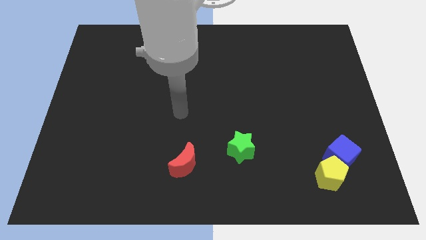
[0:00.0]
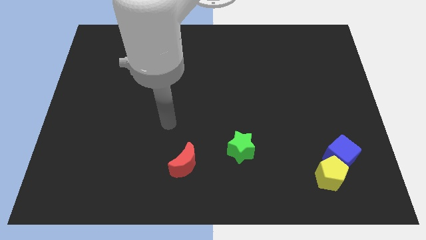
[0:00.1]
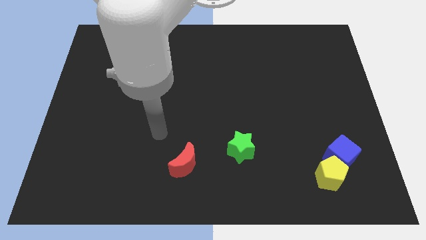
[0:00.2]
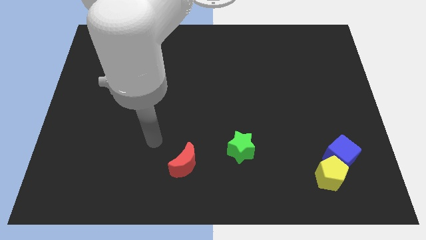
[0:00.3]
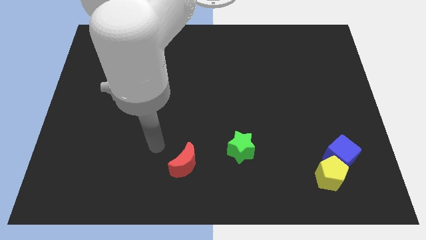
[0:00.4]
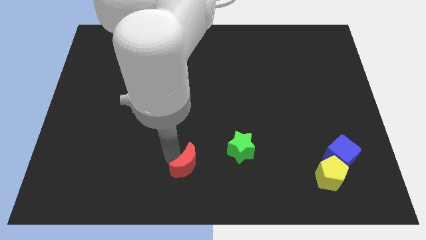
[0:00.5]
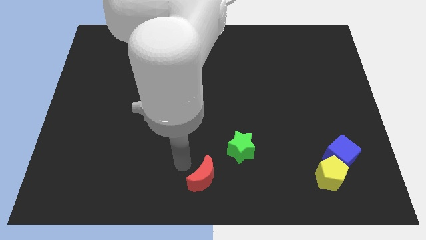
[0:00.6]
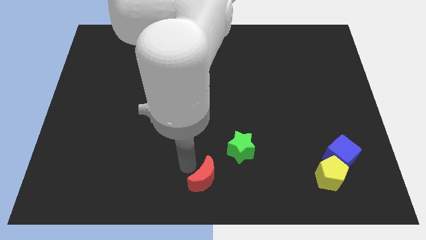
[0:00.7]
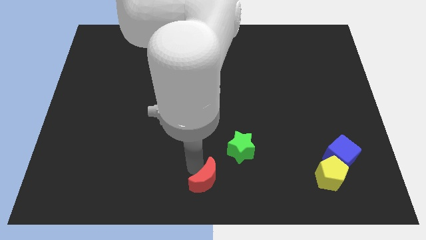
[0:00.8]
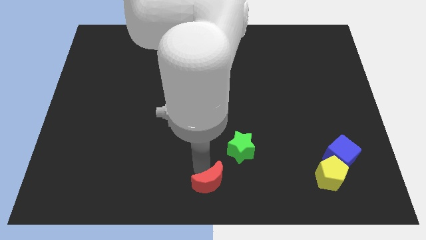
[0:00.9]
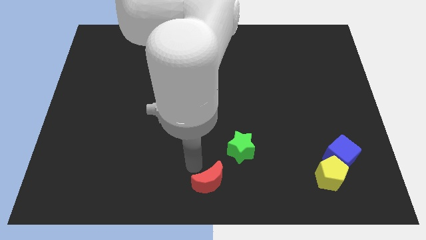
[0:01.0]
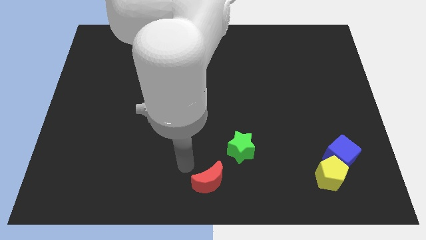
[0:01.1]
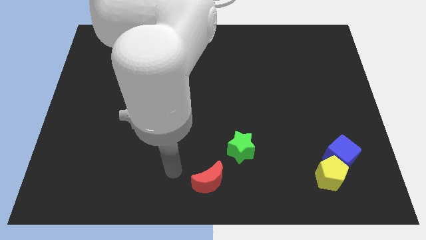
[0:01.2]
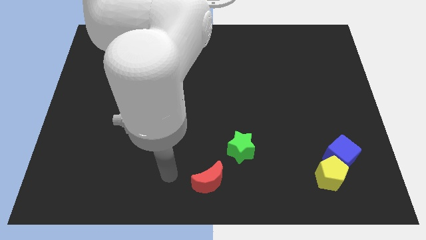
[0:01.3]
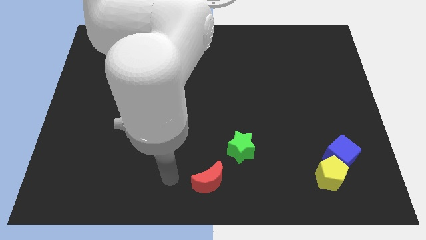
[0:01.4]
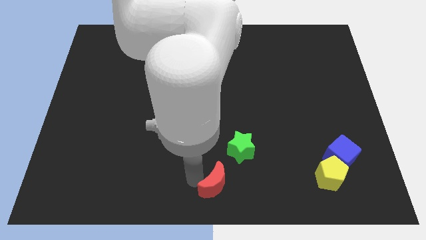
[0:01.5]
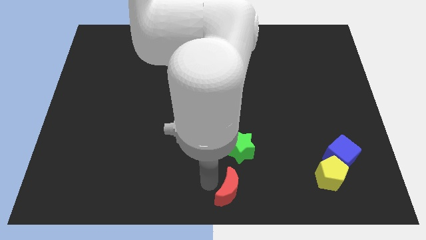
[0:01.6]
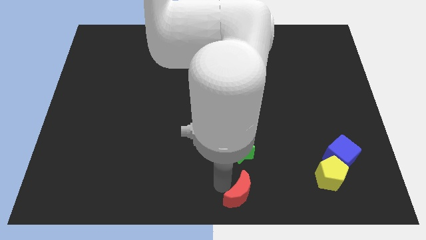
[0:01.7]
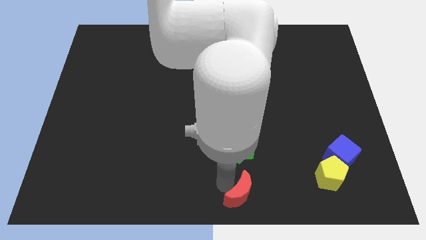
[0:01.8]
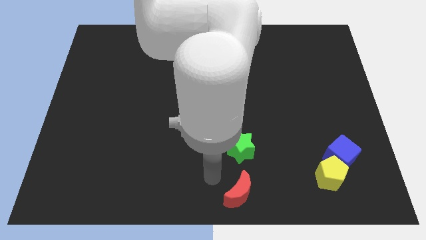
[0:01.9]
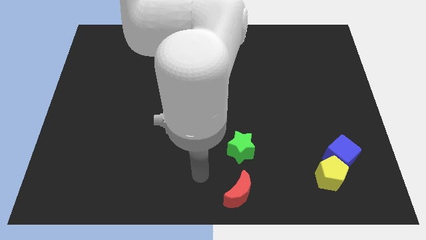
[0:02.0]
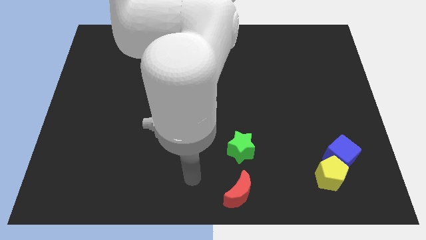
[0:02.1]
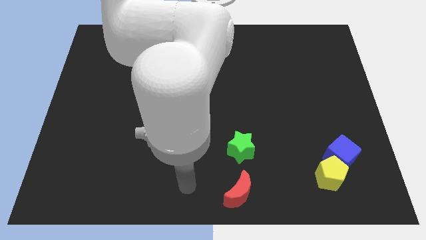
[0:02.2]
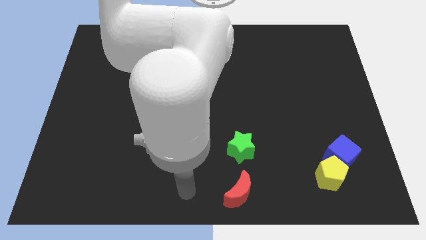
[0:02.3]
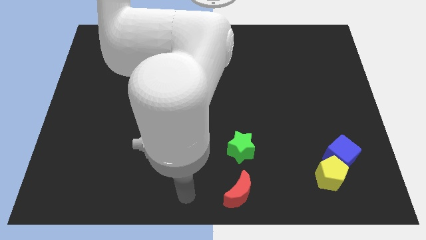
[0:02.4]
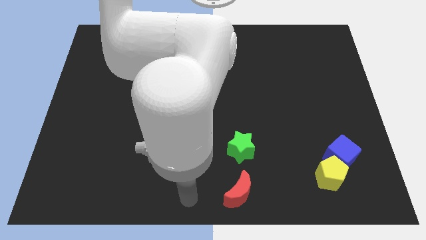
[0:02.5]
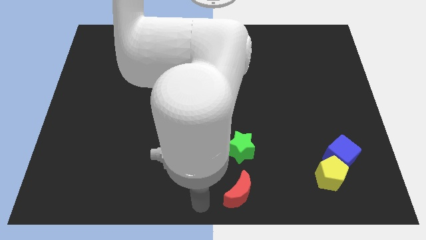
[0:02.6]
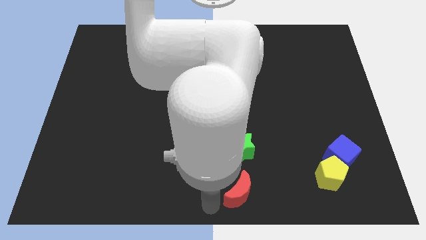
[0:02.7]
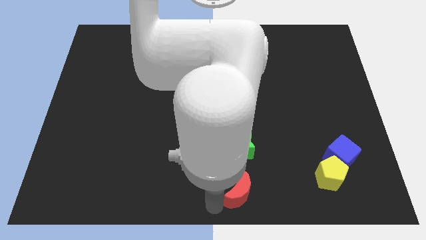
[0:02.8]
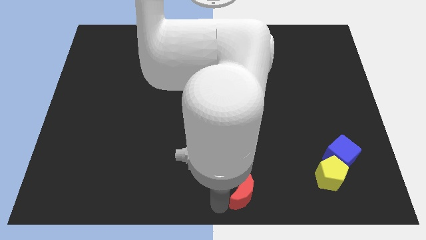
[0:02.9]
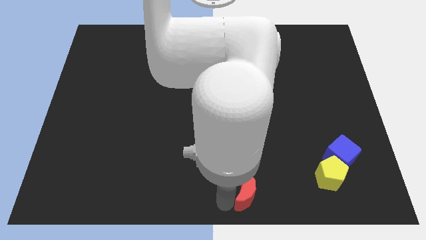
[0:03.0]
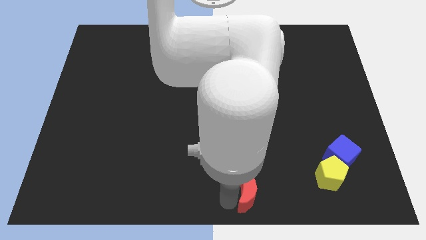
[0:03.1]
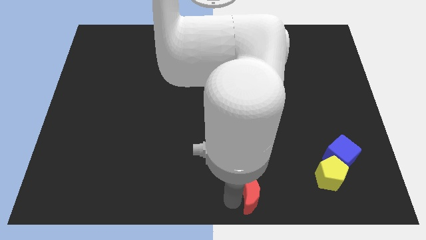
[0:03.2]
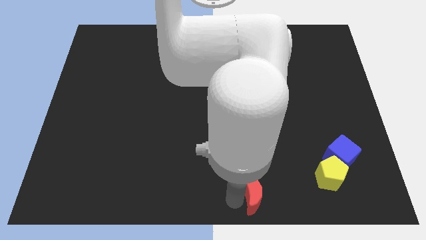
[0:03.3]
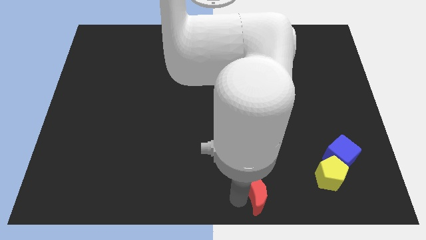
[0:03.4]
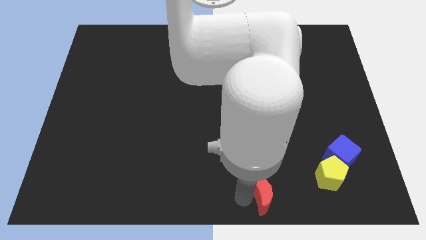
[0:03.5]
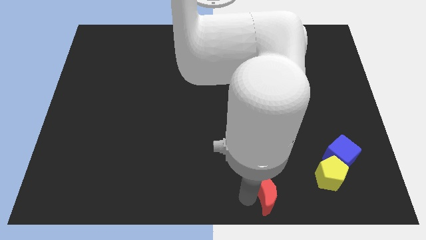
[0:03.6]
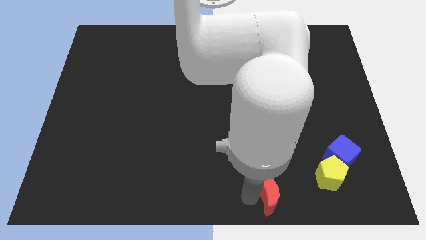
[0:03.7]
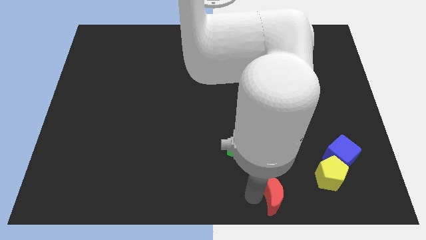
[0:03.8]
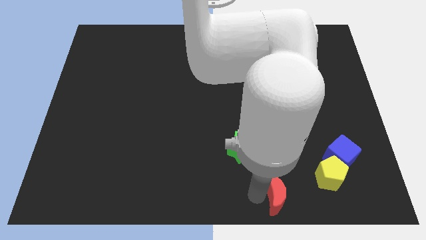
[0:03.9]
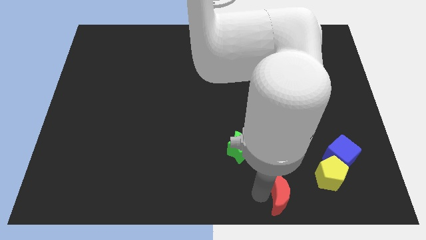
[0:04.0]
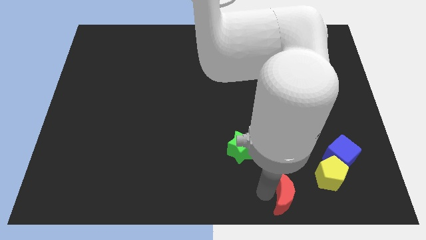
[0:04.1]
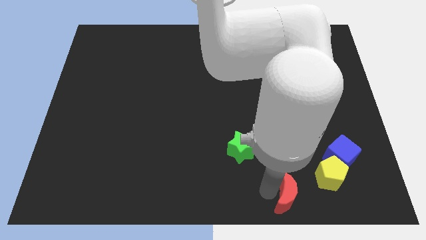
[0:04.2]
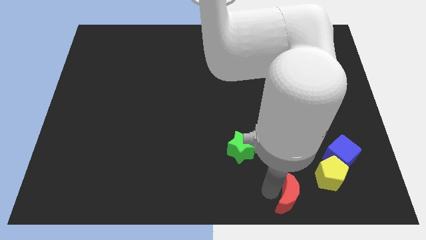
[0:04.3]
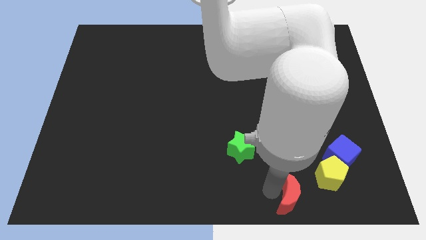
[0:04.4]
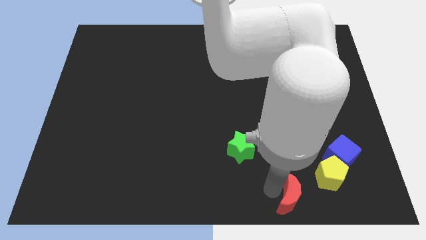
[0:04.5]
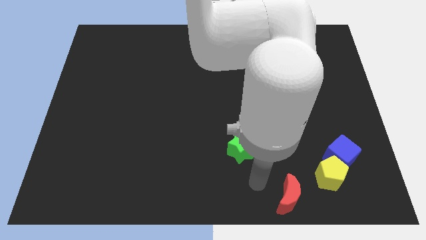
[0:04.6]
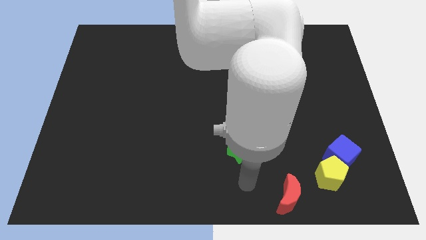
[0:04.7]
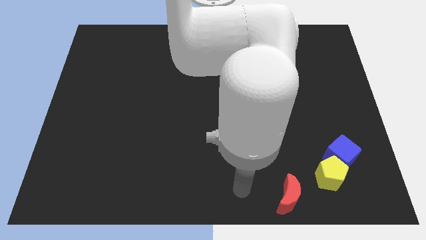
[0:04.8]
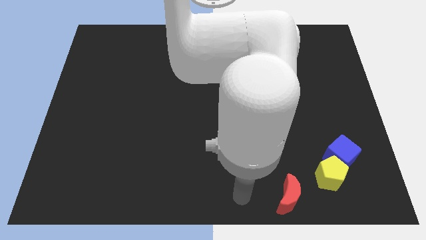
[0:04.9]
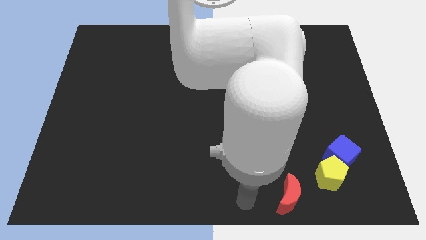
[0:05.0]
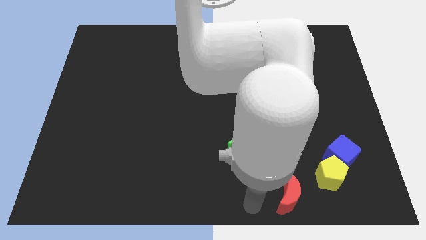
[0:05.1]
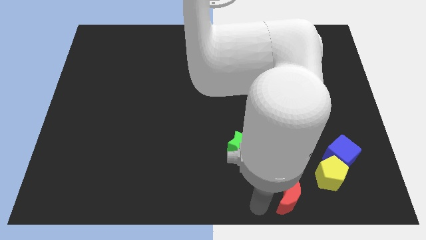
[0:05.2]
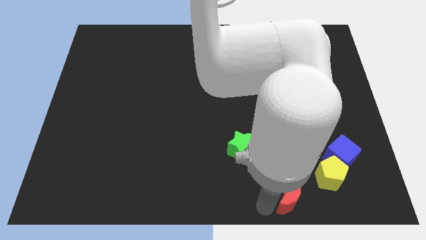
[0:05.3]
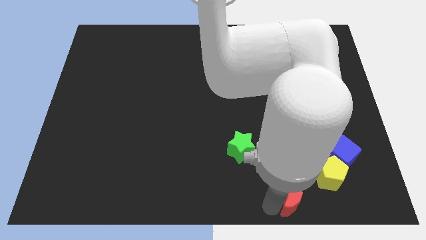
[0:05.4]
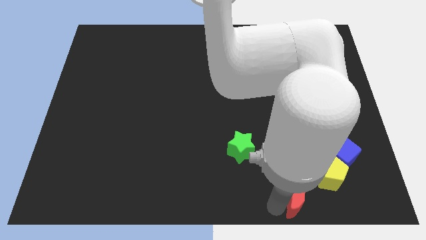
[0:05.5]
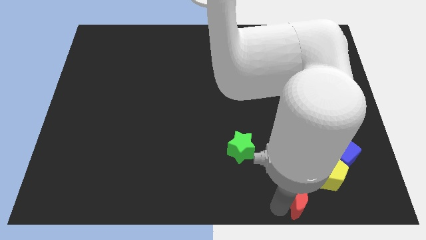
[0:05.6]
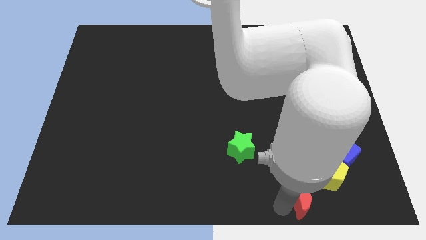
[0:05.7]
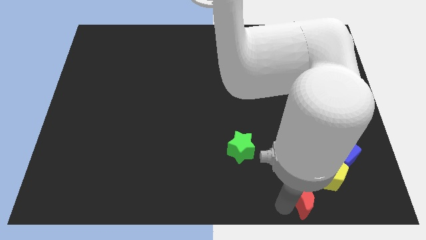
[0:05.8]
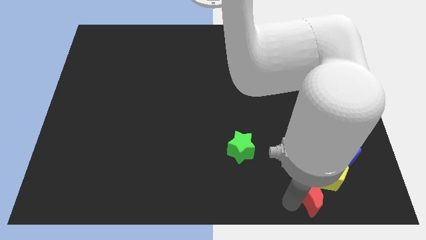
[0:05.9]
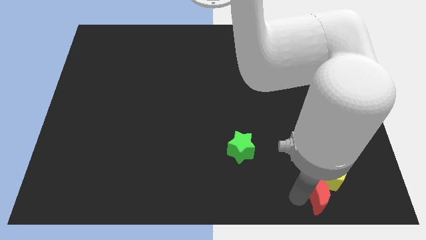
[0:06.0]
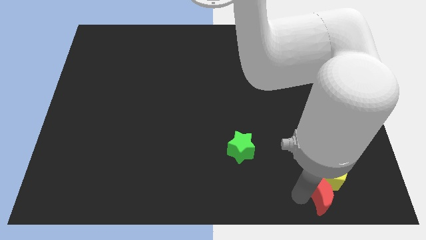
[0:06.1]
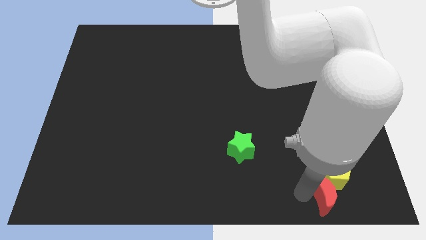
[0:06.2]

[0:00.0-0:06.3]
slide the red block close to the pentagon

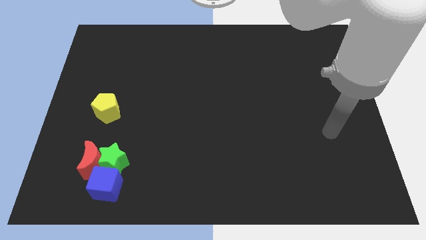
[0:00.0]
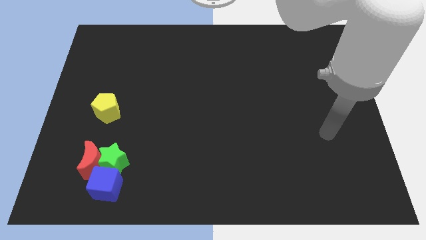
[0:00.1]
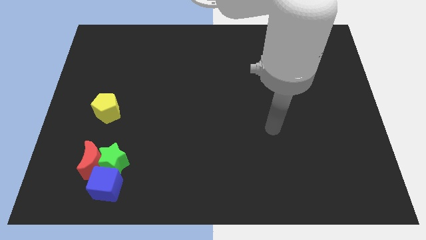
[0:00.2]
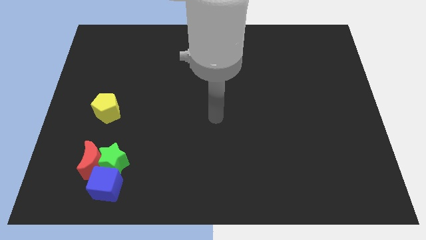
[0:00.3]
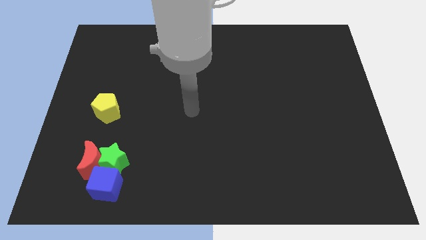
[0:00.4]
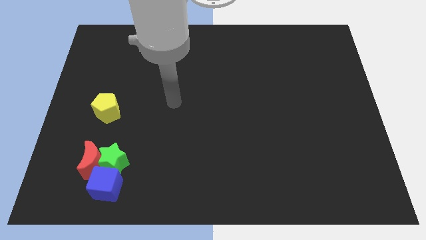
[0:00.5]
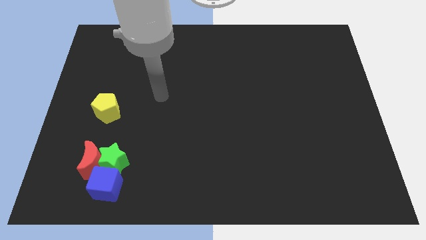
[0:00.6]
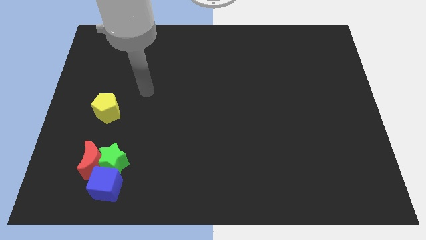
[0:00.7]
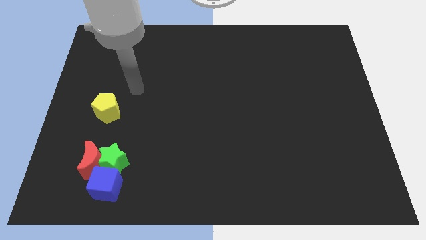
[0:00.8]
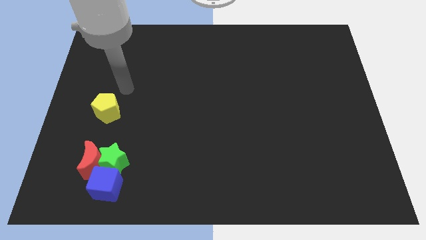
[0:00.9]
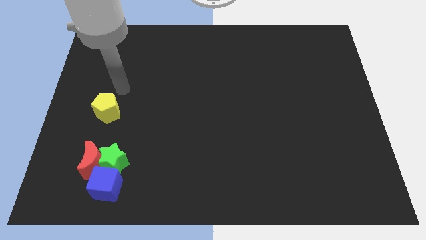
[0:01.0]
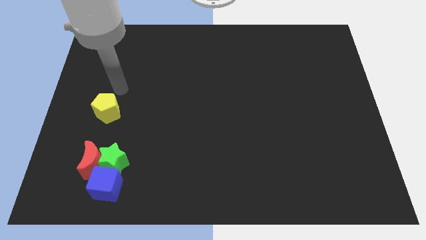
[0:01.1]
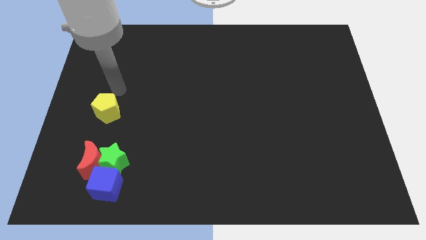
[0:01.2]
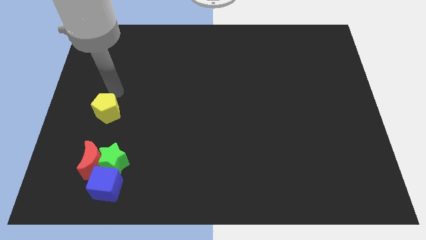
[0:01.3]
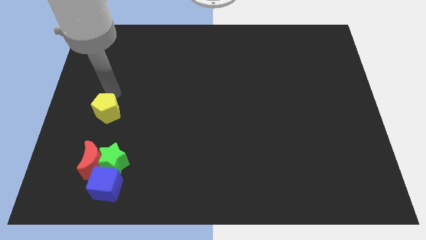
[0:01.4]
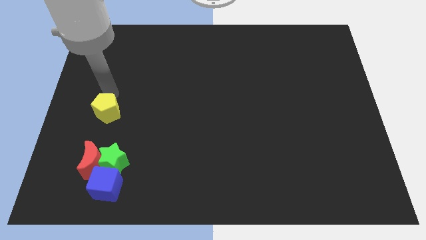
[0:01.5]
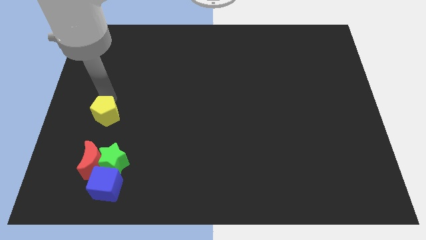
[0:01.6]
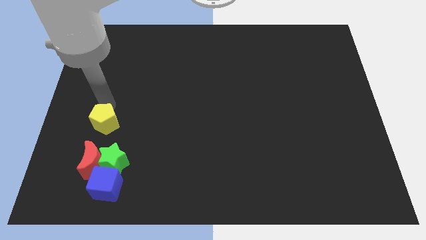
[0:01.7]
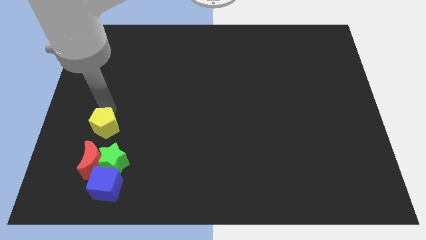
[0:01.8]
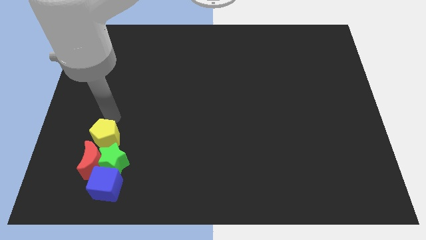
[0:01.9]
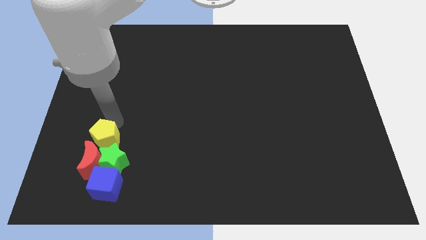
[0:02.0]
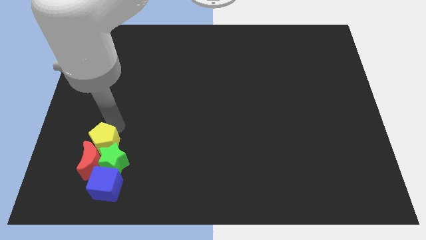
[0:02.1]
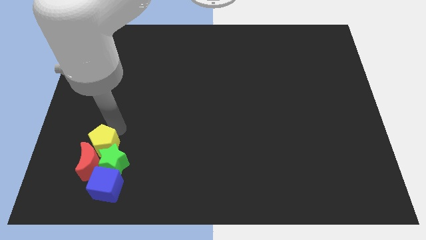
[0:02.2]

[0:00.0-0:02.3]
slide the pentagon close to the green star
